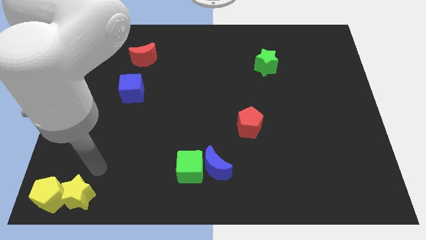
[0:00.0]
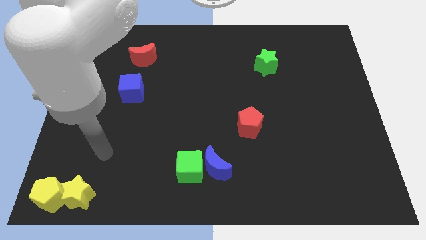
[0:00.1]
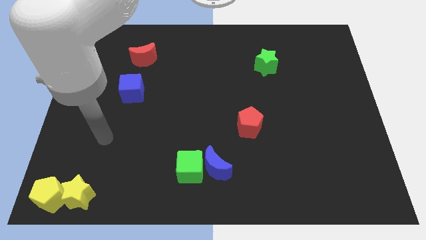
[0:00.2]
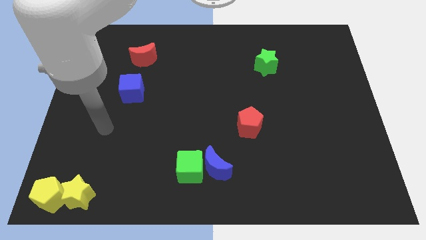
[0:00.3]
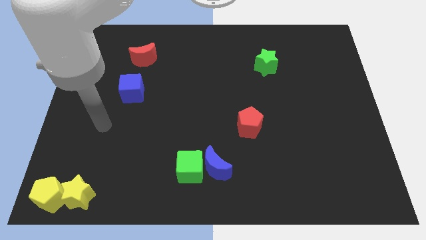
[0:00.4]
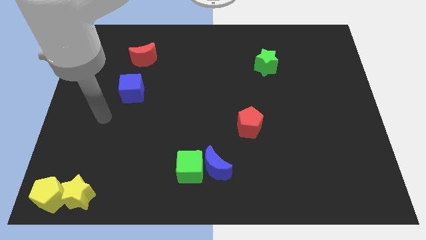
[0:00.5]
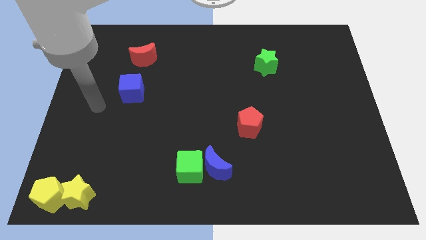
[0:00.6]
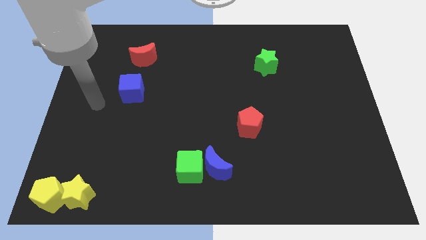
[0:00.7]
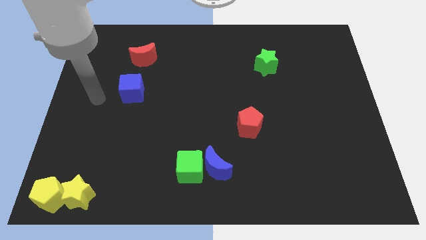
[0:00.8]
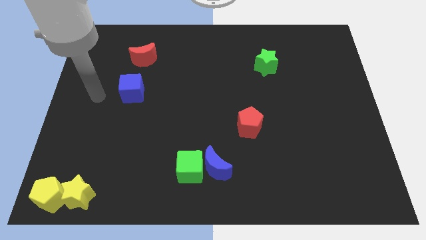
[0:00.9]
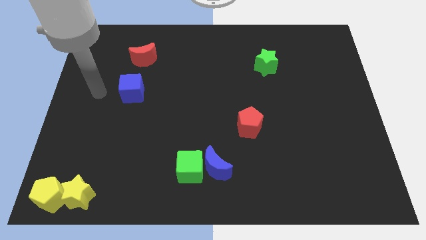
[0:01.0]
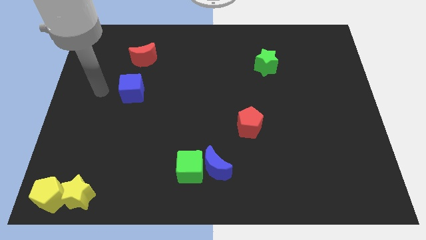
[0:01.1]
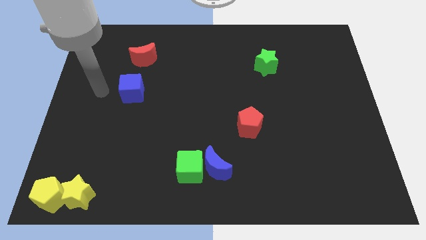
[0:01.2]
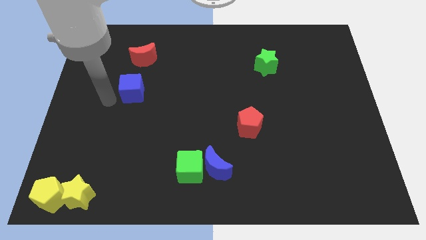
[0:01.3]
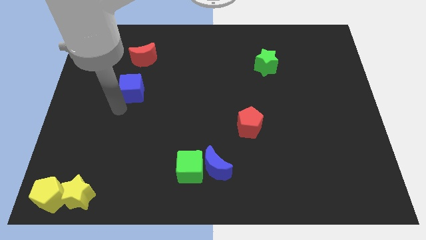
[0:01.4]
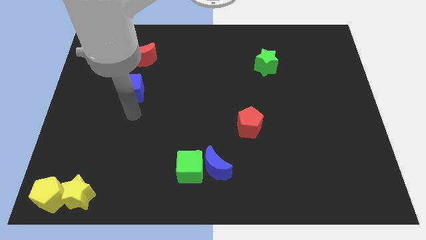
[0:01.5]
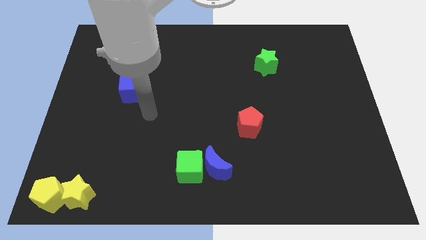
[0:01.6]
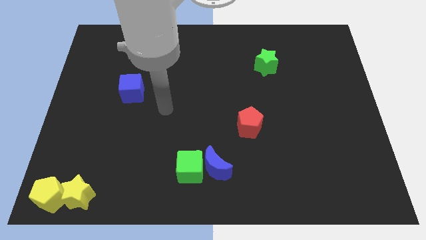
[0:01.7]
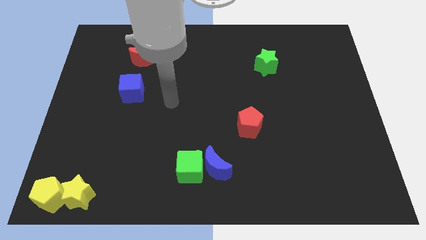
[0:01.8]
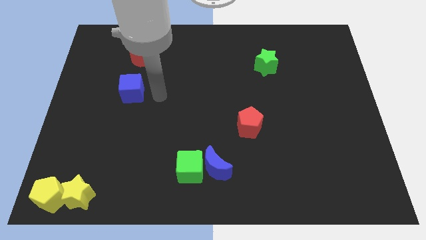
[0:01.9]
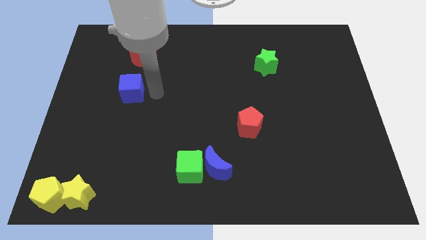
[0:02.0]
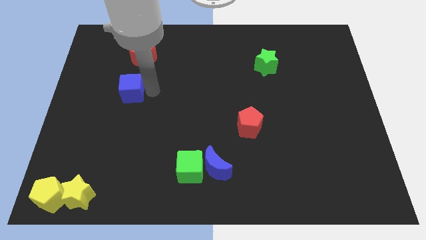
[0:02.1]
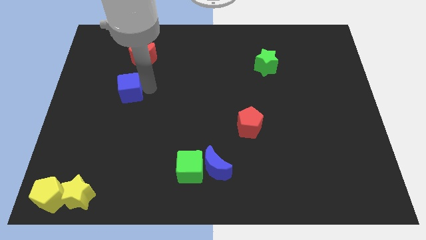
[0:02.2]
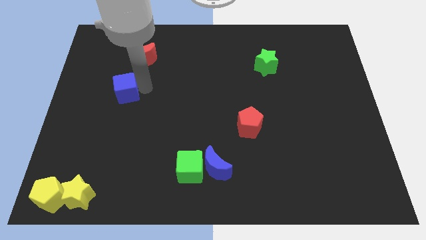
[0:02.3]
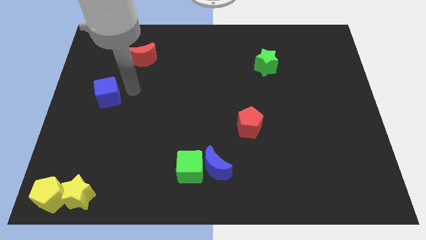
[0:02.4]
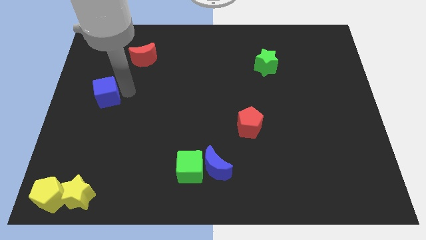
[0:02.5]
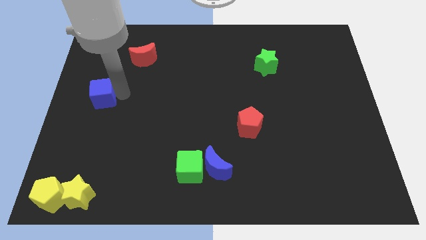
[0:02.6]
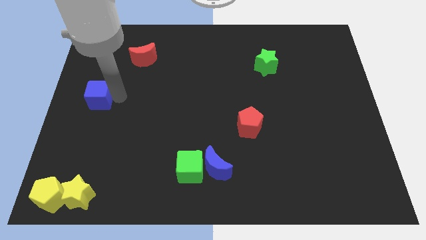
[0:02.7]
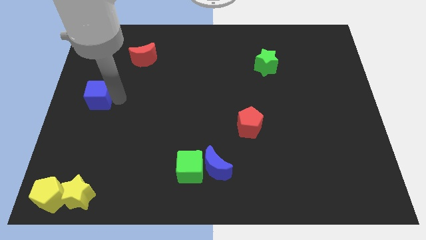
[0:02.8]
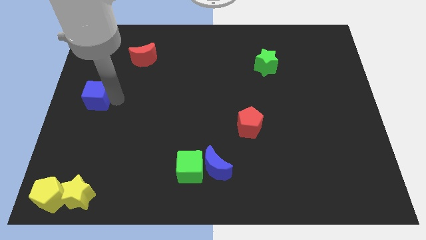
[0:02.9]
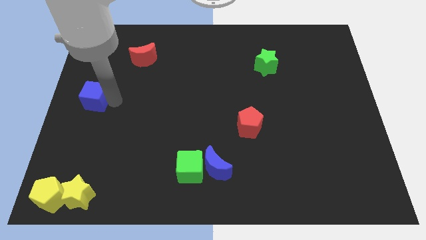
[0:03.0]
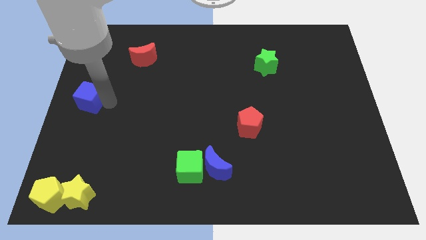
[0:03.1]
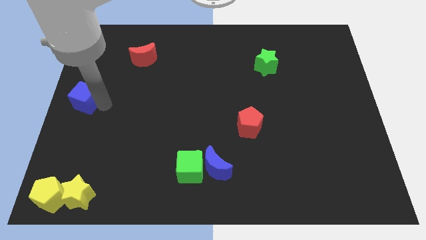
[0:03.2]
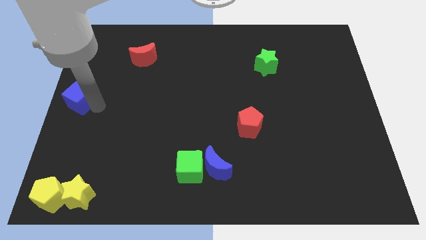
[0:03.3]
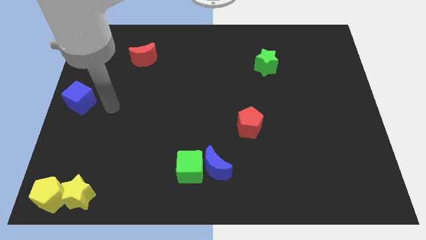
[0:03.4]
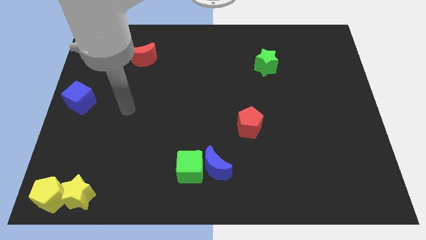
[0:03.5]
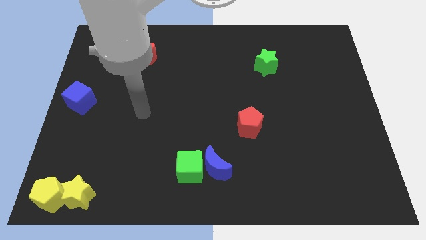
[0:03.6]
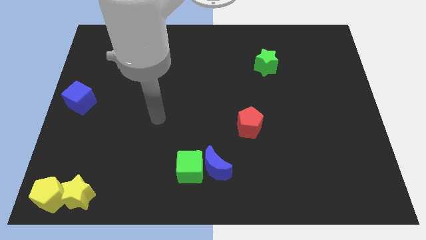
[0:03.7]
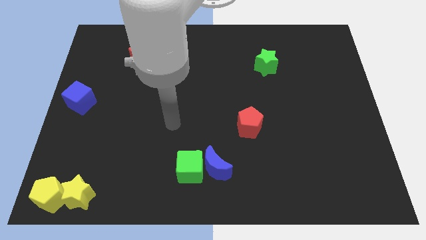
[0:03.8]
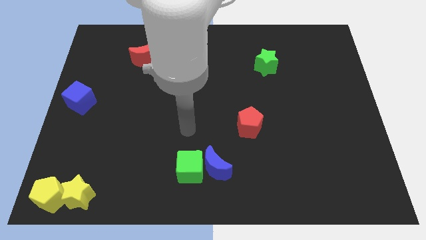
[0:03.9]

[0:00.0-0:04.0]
slide the blue square to the left center of the board

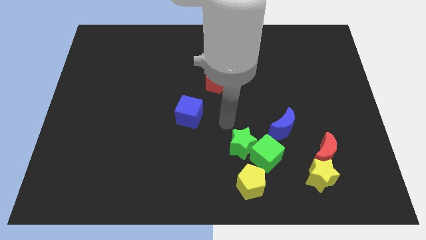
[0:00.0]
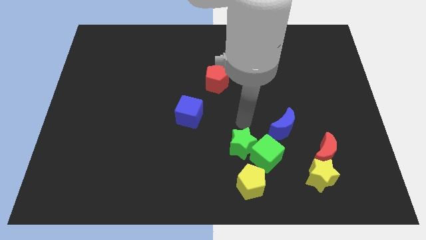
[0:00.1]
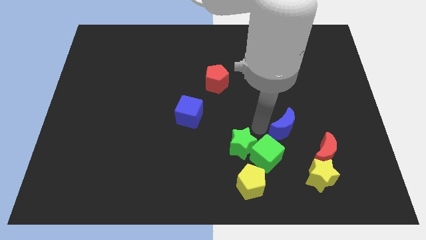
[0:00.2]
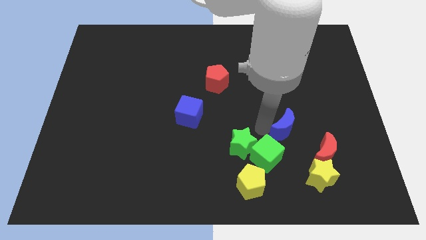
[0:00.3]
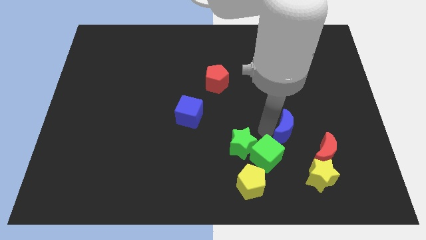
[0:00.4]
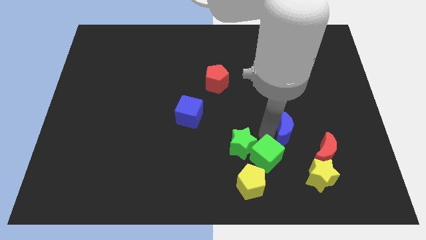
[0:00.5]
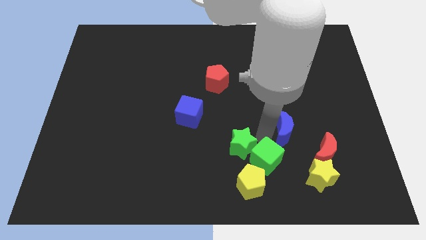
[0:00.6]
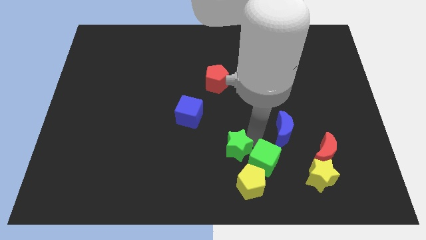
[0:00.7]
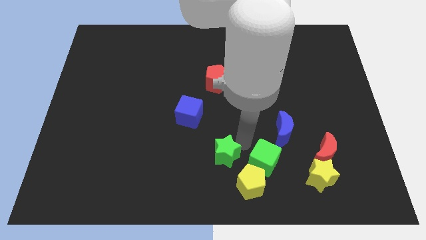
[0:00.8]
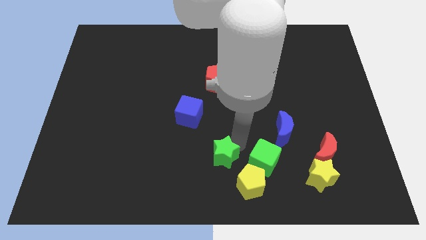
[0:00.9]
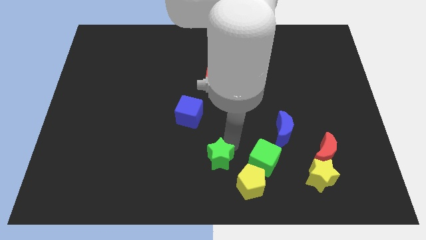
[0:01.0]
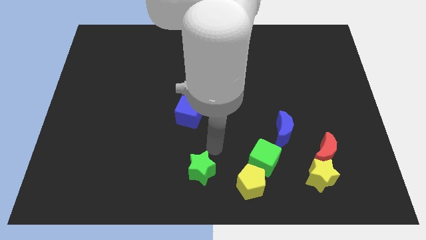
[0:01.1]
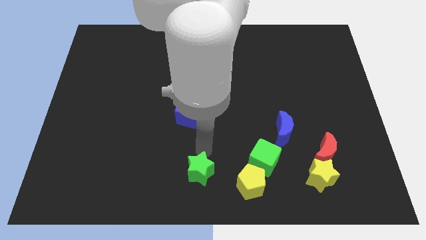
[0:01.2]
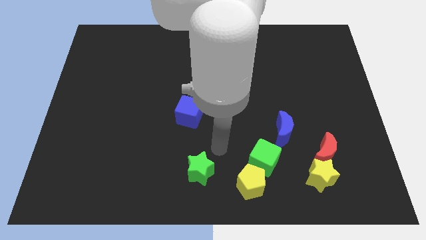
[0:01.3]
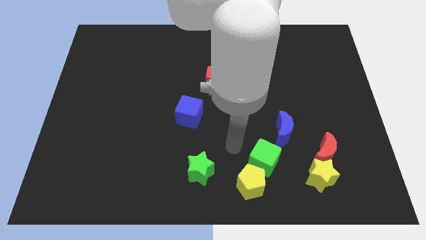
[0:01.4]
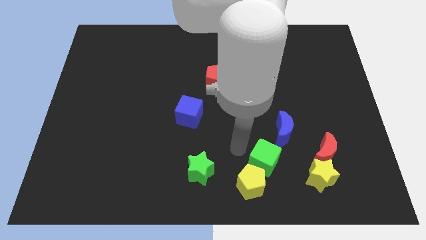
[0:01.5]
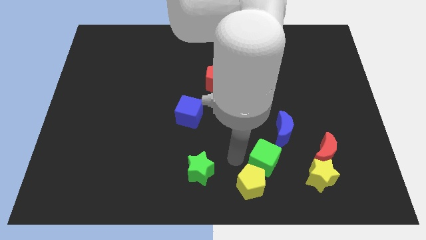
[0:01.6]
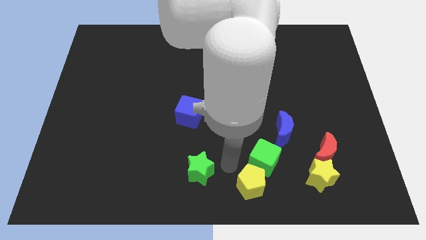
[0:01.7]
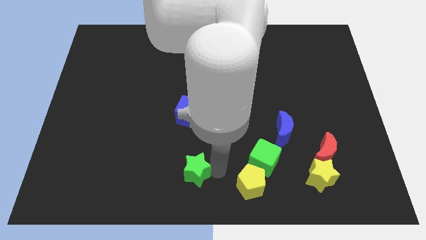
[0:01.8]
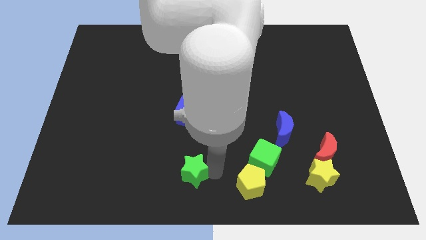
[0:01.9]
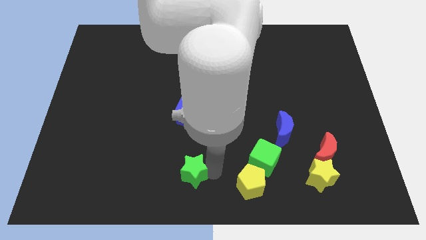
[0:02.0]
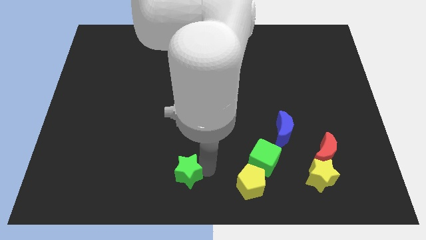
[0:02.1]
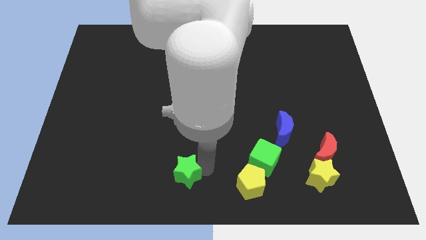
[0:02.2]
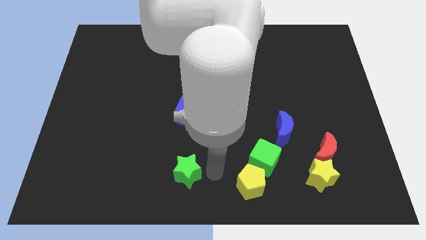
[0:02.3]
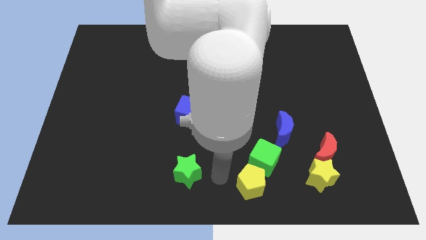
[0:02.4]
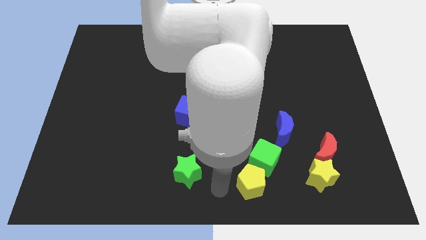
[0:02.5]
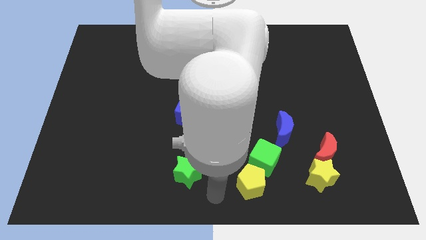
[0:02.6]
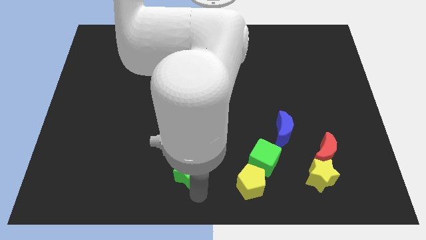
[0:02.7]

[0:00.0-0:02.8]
move the green star towards the bottom center of the board

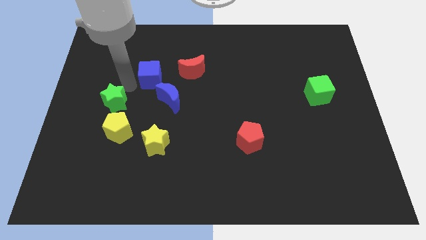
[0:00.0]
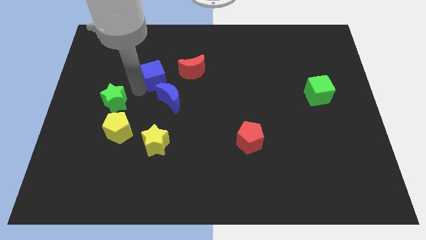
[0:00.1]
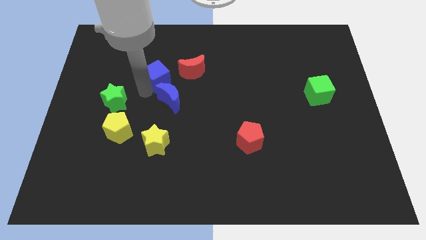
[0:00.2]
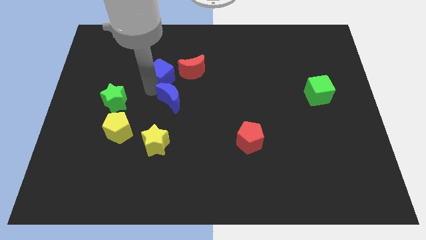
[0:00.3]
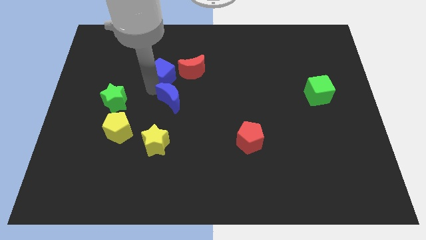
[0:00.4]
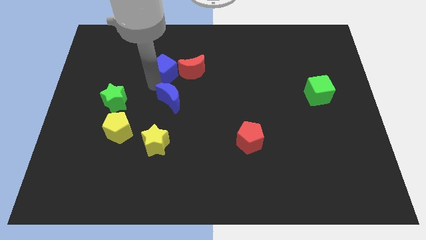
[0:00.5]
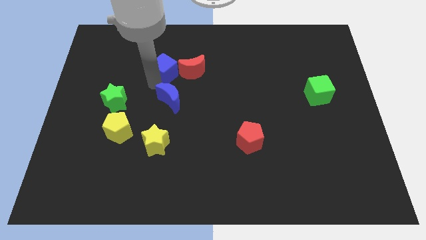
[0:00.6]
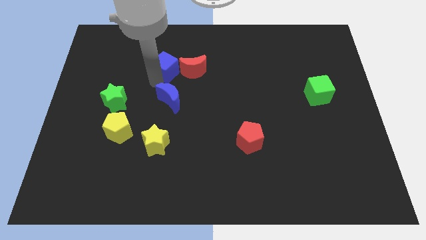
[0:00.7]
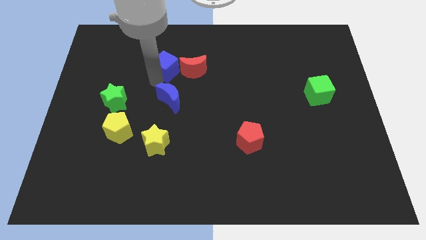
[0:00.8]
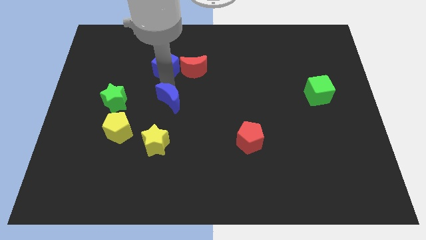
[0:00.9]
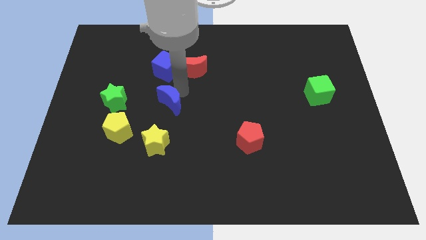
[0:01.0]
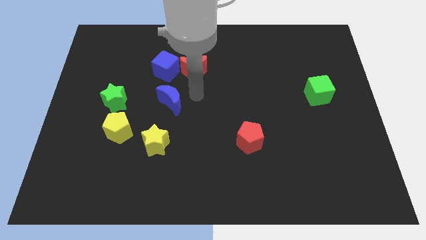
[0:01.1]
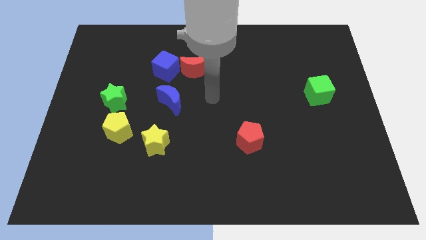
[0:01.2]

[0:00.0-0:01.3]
push blue cube into the red moon

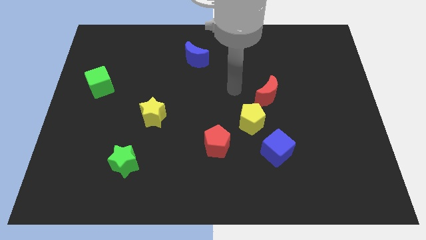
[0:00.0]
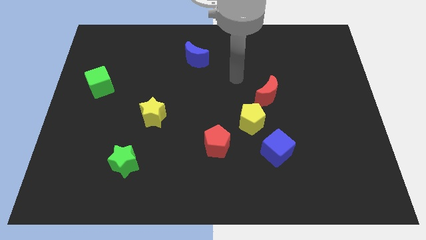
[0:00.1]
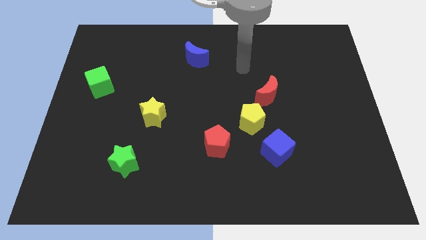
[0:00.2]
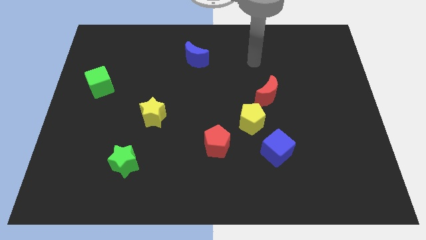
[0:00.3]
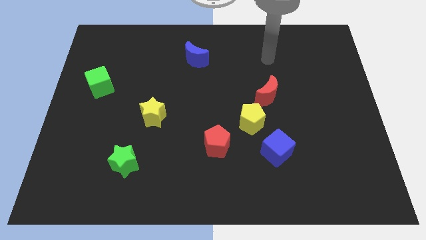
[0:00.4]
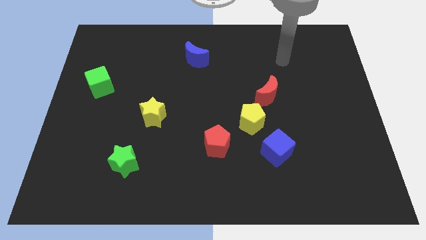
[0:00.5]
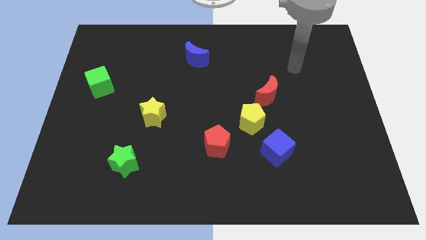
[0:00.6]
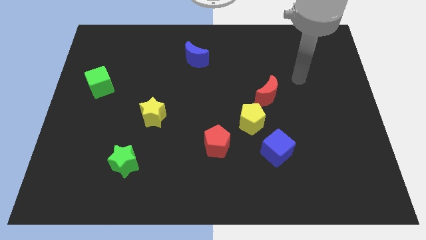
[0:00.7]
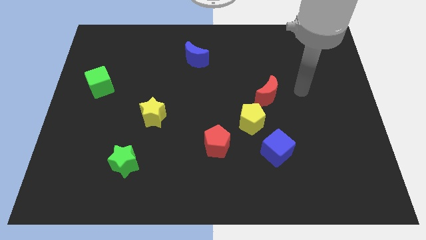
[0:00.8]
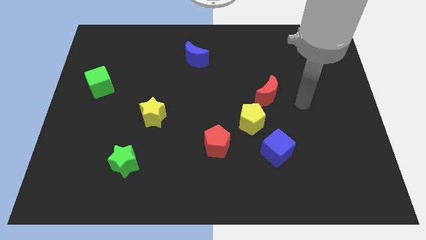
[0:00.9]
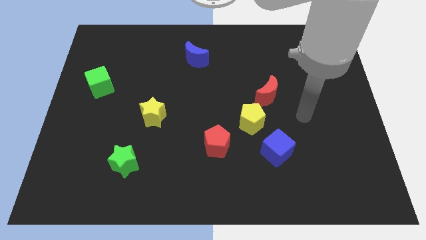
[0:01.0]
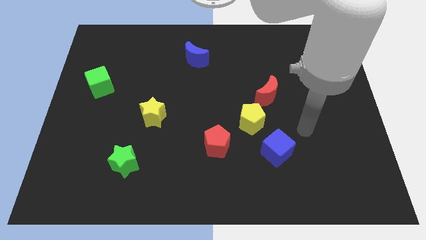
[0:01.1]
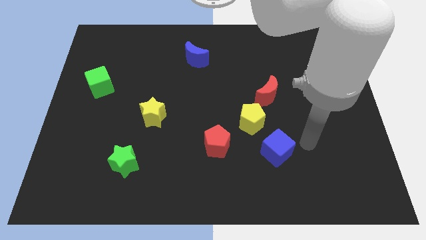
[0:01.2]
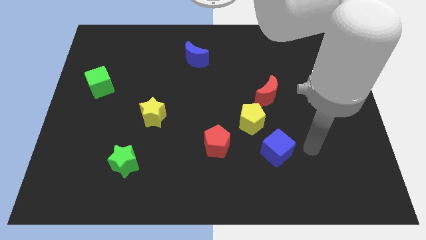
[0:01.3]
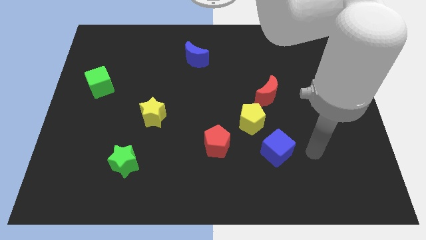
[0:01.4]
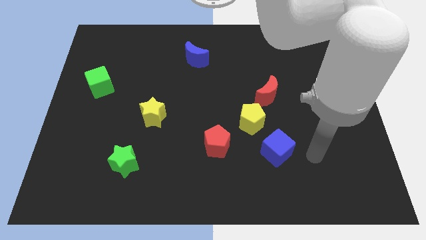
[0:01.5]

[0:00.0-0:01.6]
move your arm away from the red moon
